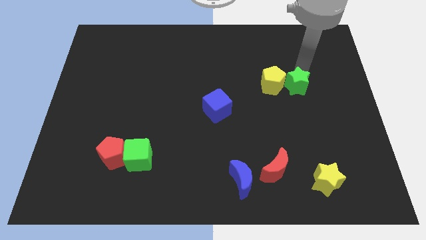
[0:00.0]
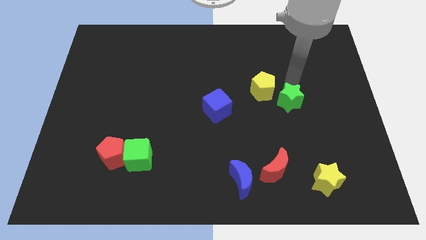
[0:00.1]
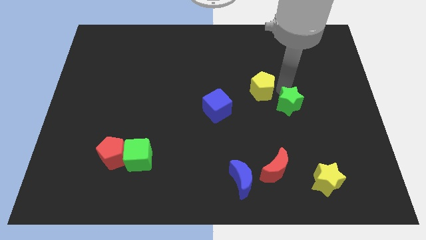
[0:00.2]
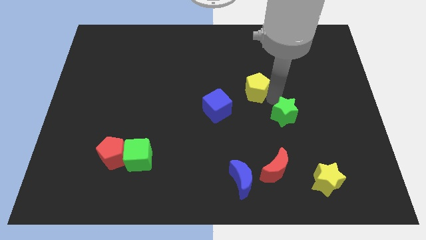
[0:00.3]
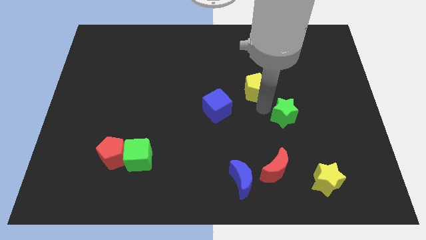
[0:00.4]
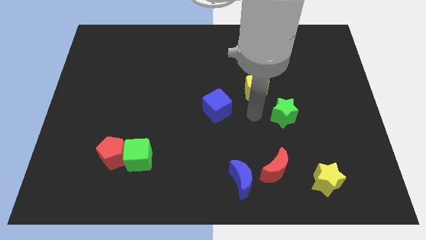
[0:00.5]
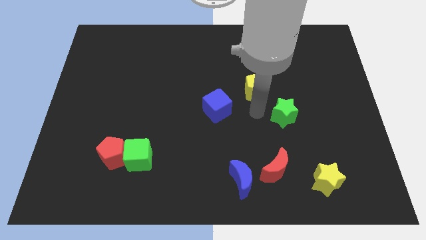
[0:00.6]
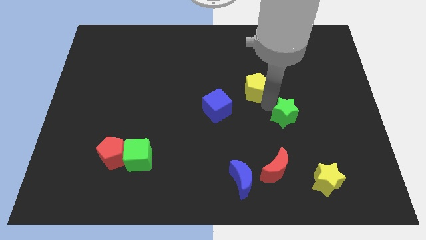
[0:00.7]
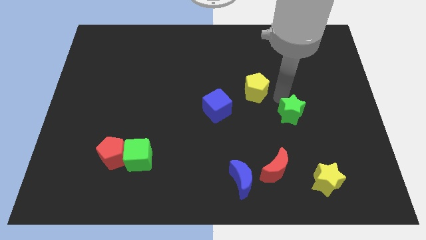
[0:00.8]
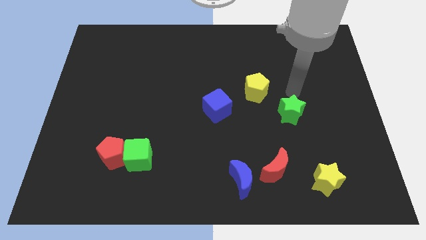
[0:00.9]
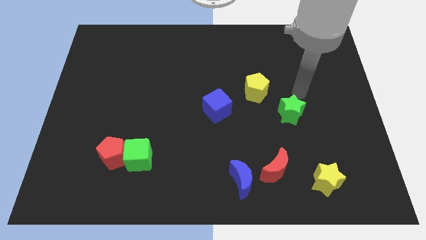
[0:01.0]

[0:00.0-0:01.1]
separate the yellow pentagon and the green star

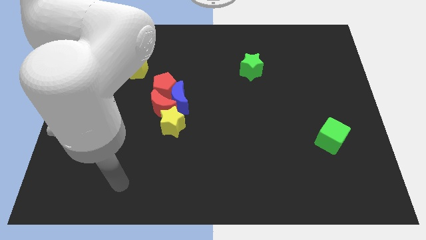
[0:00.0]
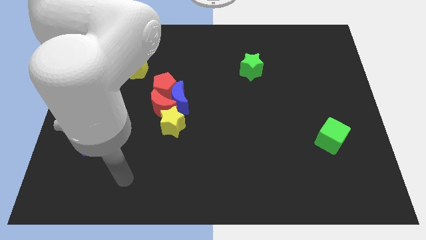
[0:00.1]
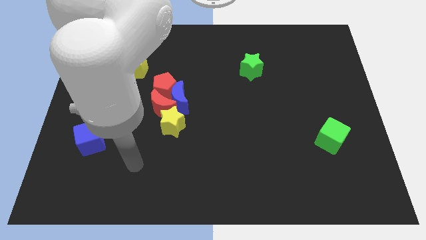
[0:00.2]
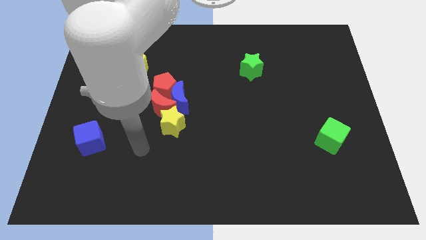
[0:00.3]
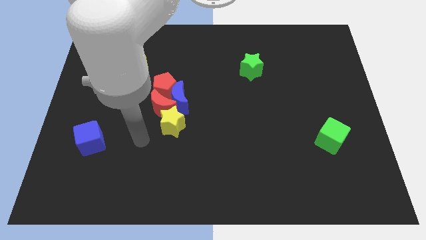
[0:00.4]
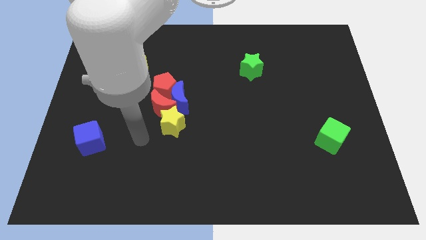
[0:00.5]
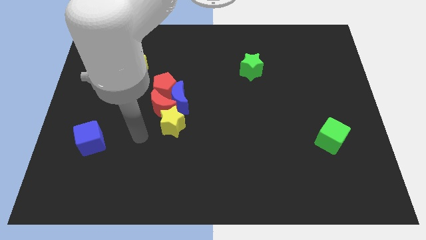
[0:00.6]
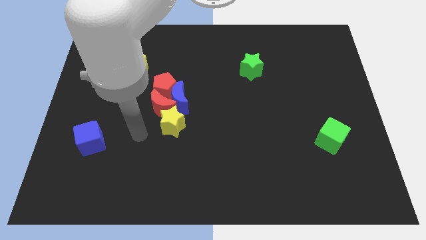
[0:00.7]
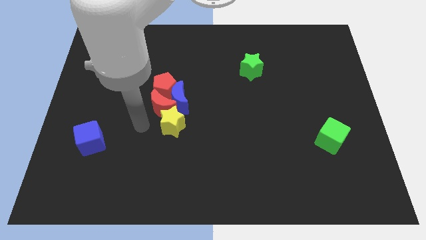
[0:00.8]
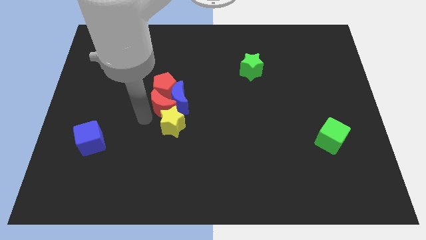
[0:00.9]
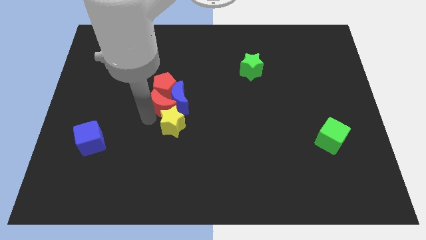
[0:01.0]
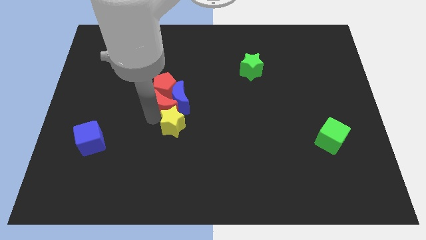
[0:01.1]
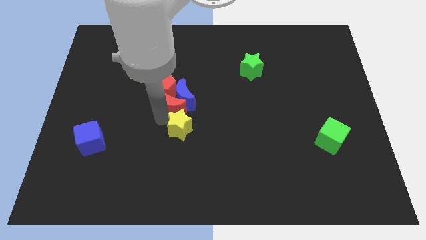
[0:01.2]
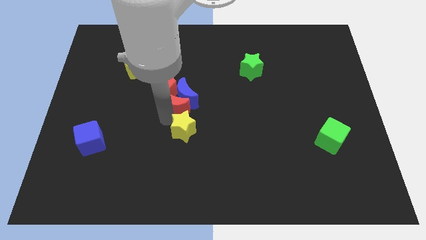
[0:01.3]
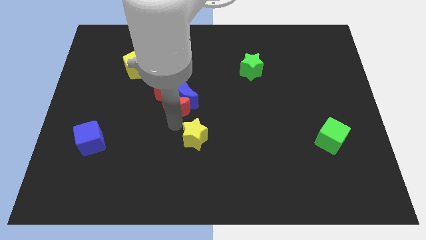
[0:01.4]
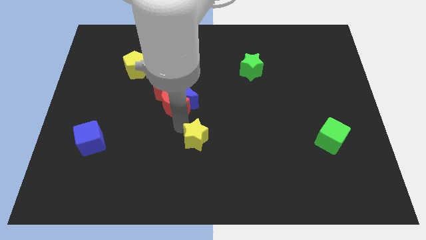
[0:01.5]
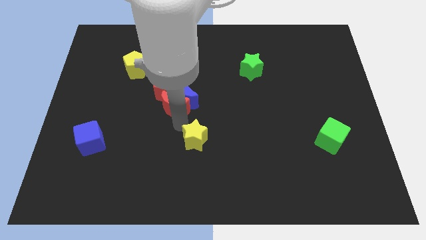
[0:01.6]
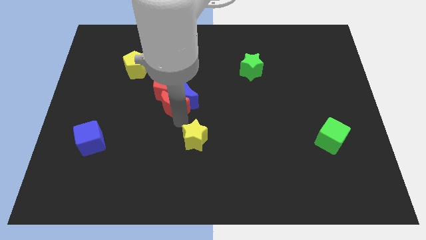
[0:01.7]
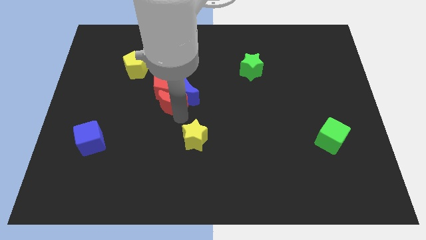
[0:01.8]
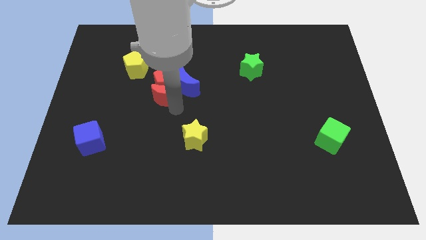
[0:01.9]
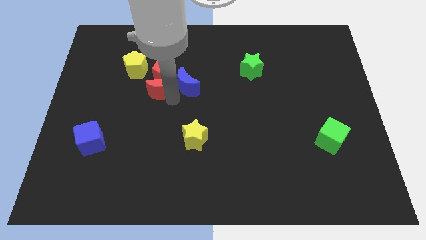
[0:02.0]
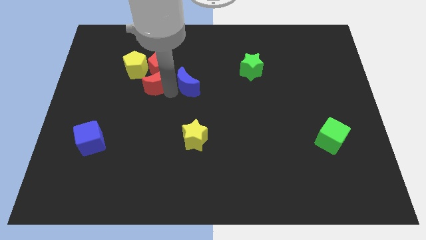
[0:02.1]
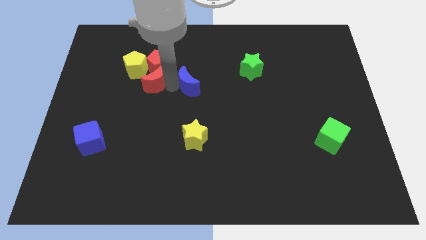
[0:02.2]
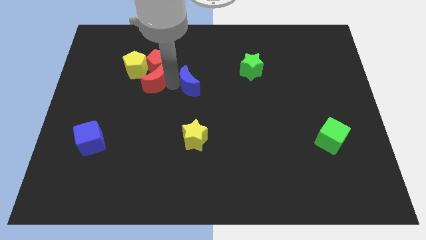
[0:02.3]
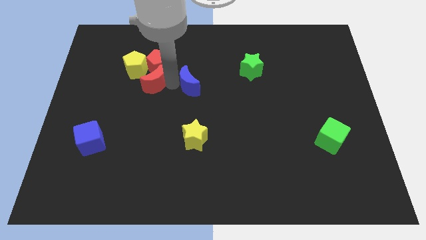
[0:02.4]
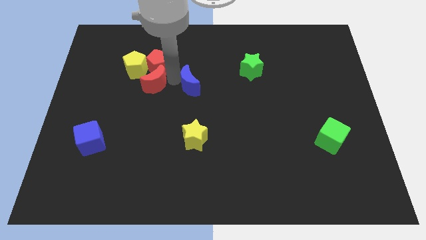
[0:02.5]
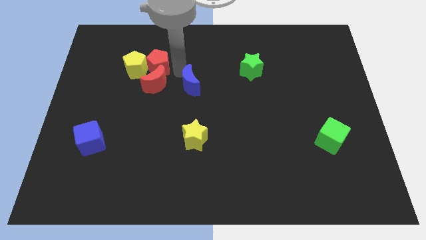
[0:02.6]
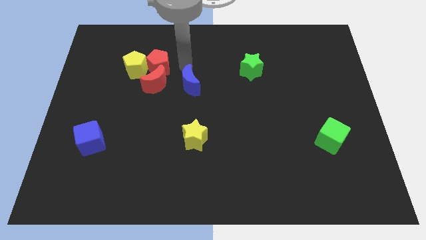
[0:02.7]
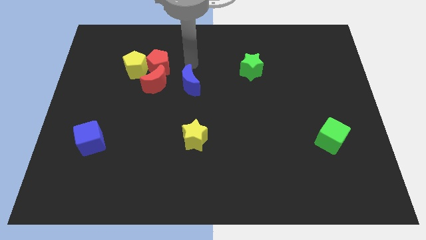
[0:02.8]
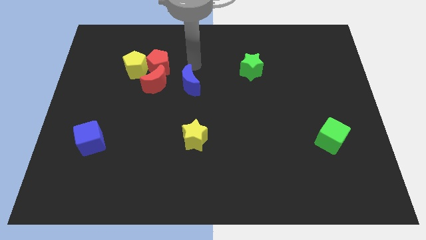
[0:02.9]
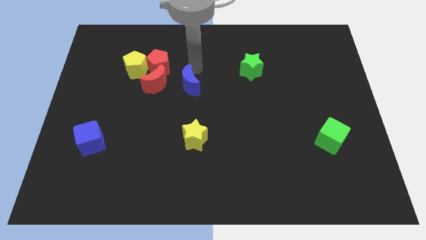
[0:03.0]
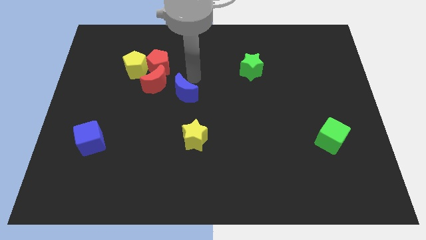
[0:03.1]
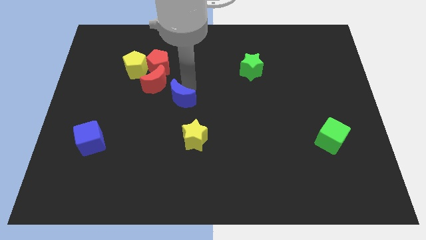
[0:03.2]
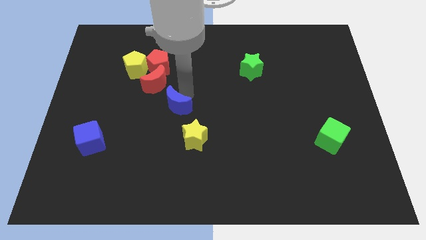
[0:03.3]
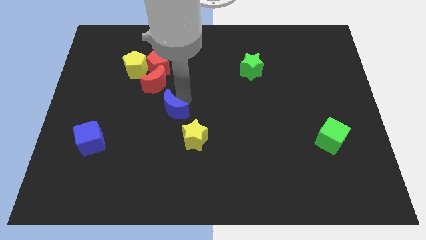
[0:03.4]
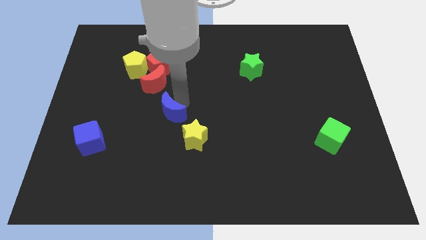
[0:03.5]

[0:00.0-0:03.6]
place the blue crescent in between the yellow star and the red crescent

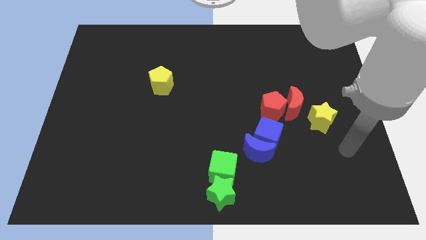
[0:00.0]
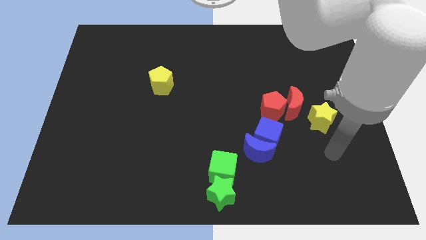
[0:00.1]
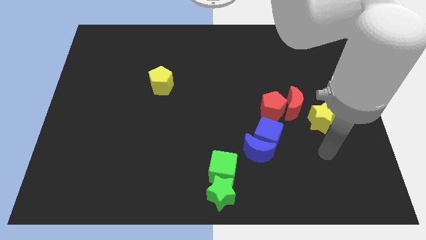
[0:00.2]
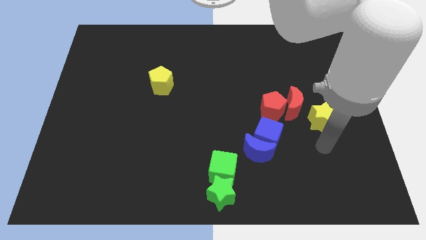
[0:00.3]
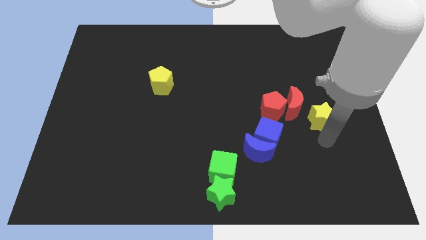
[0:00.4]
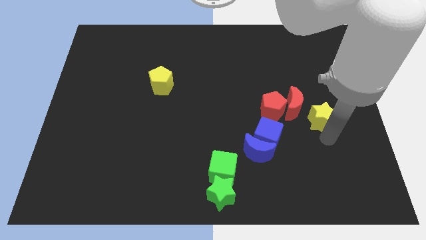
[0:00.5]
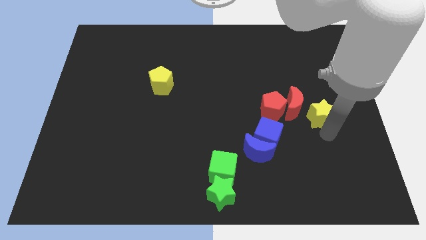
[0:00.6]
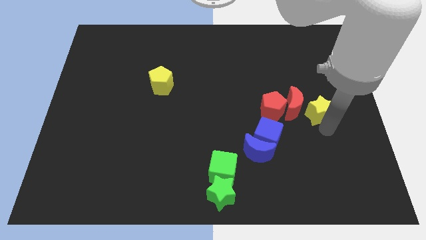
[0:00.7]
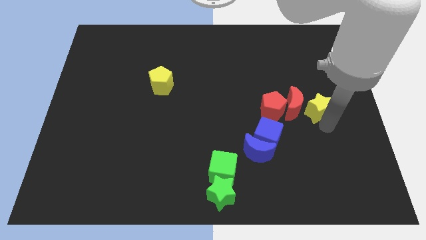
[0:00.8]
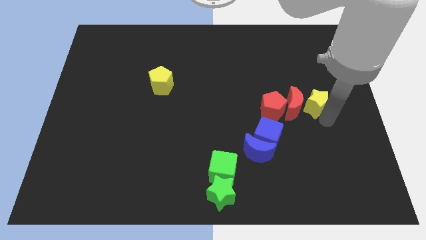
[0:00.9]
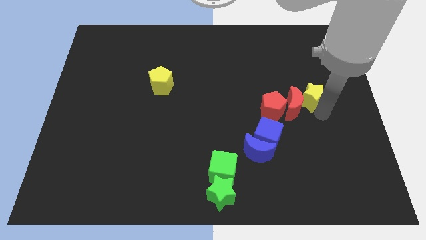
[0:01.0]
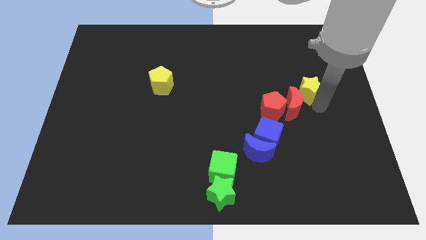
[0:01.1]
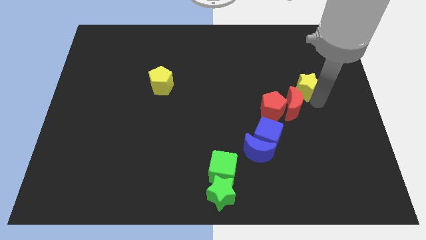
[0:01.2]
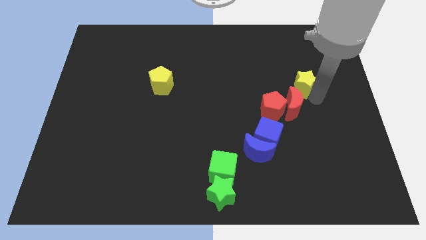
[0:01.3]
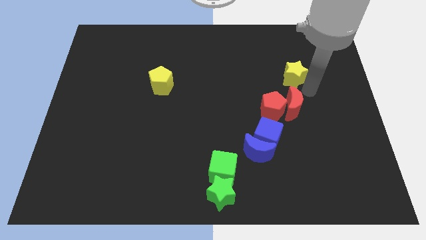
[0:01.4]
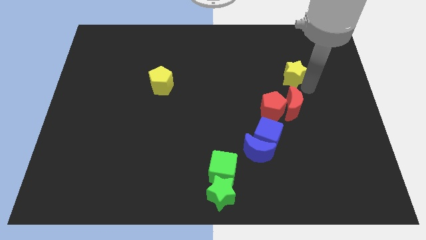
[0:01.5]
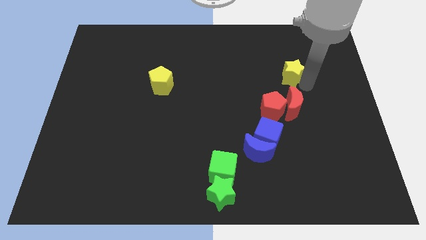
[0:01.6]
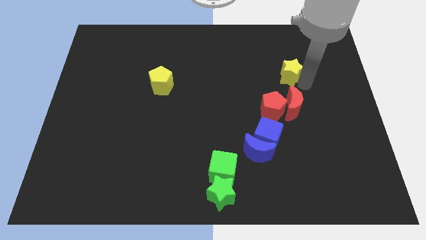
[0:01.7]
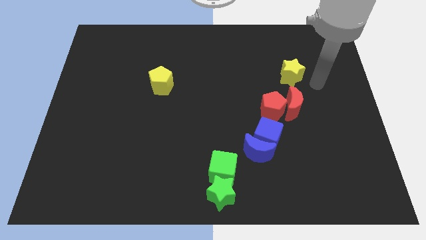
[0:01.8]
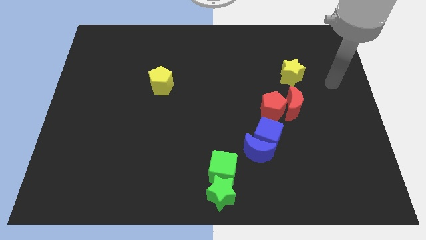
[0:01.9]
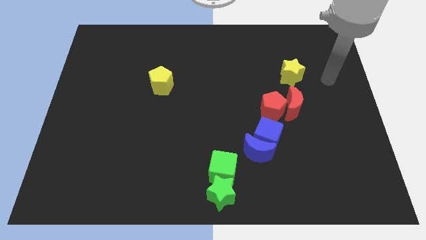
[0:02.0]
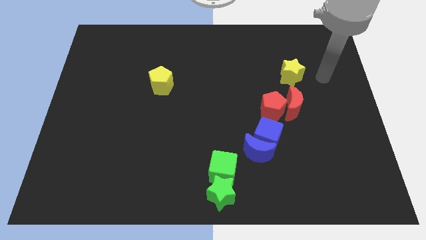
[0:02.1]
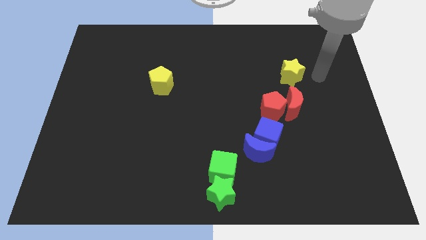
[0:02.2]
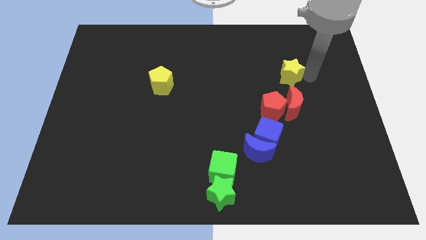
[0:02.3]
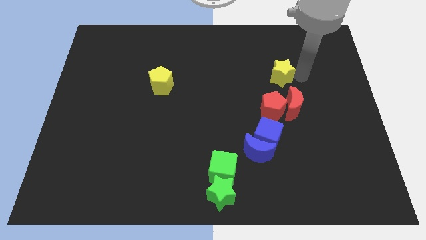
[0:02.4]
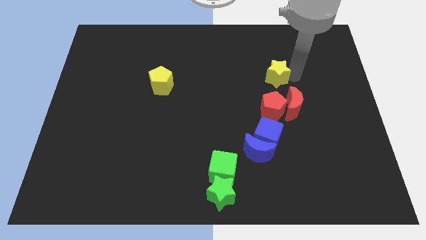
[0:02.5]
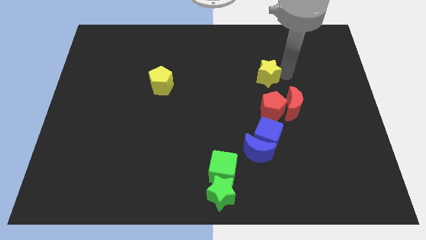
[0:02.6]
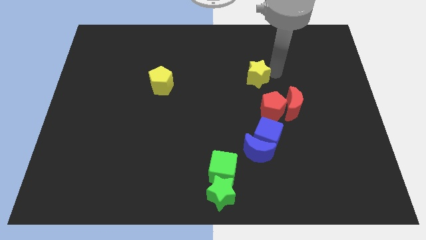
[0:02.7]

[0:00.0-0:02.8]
push yellow start on top of red pentagon

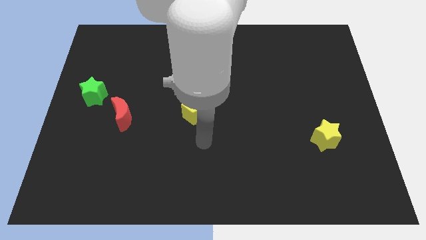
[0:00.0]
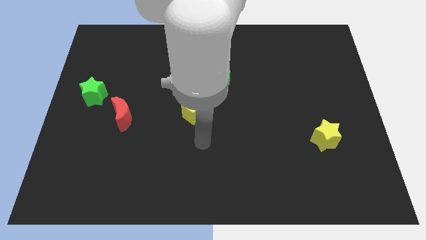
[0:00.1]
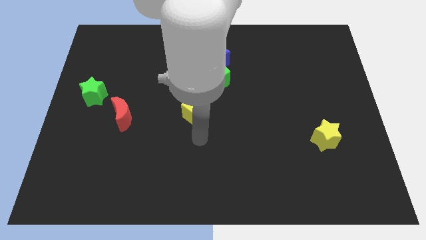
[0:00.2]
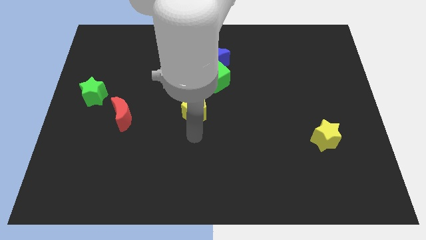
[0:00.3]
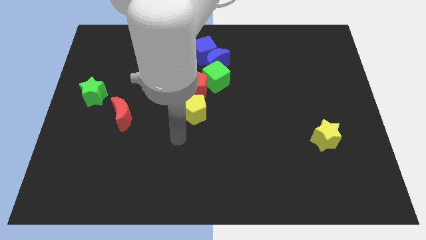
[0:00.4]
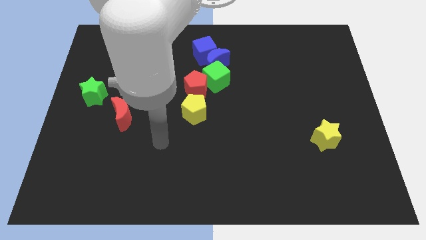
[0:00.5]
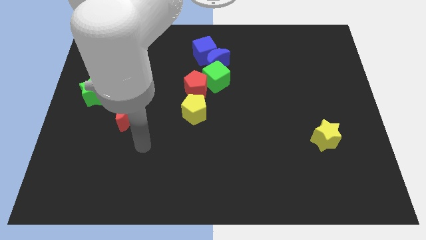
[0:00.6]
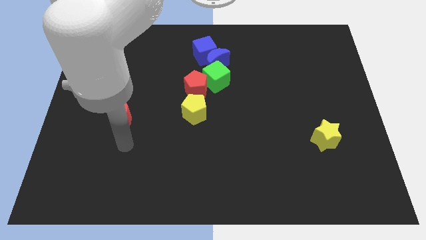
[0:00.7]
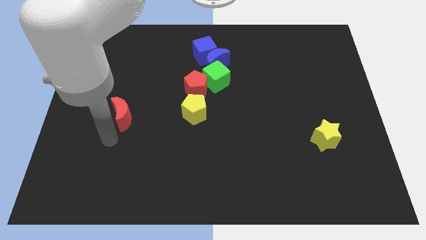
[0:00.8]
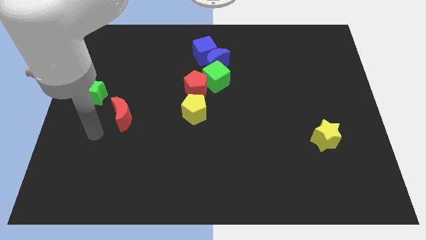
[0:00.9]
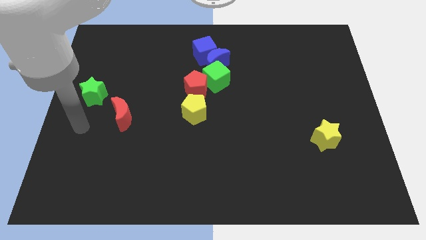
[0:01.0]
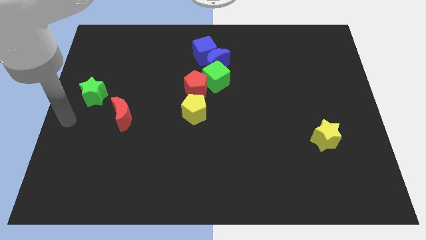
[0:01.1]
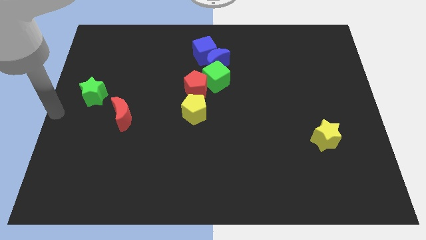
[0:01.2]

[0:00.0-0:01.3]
move your hand to the center left
